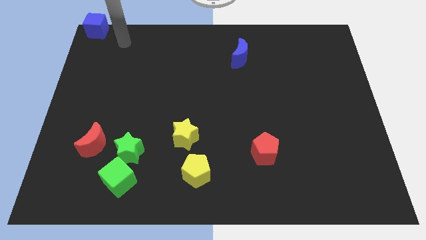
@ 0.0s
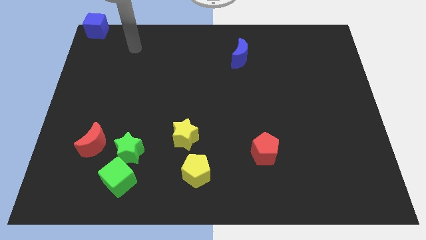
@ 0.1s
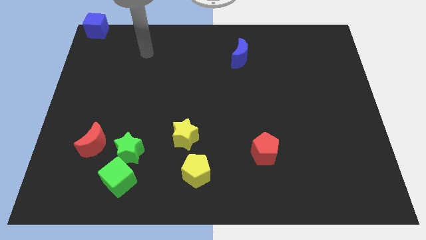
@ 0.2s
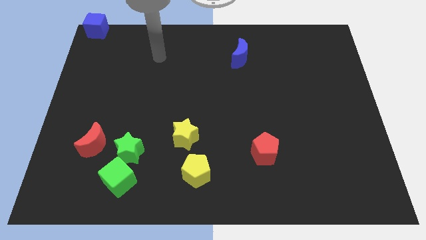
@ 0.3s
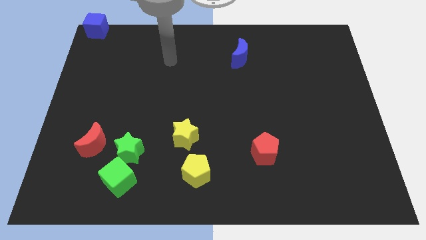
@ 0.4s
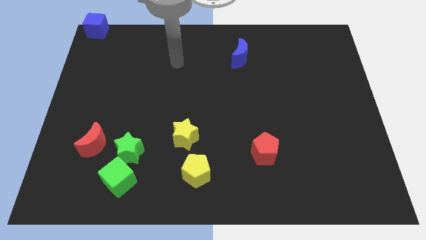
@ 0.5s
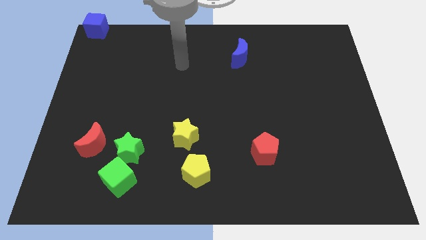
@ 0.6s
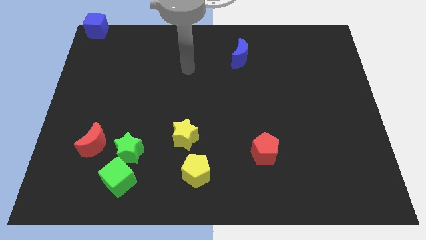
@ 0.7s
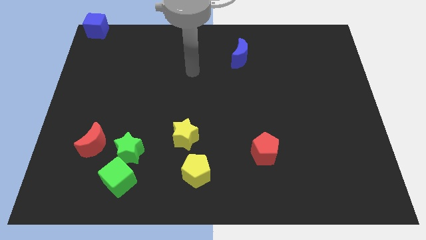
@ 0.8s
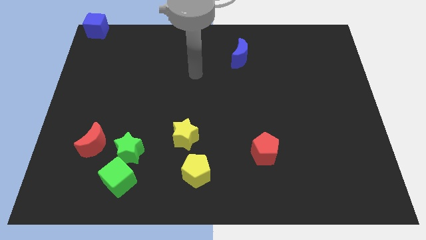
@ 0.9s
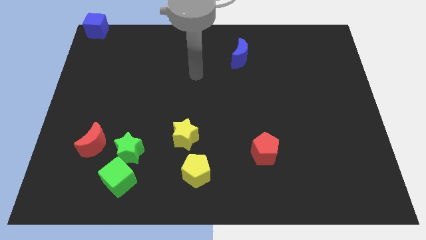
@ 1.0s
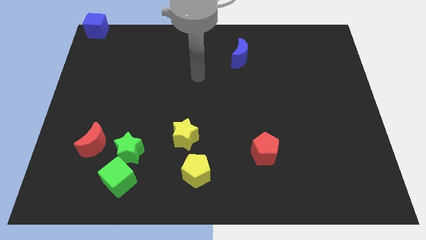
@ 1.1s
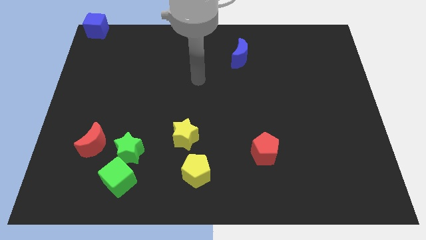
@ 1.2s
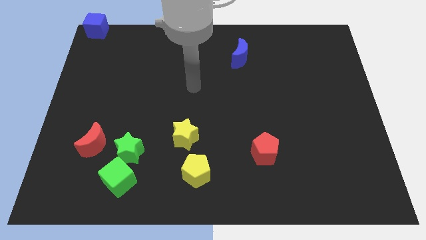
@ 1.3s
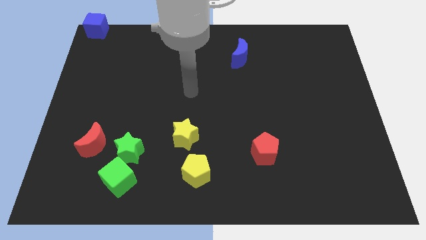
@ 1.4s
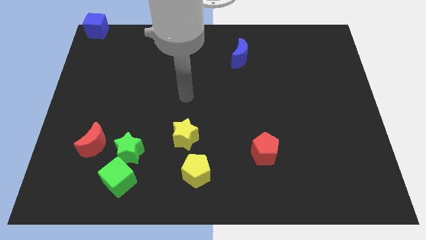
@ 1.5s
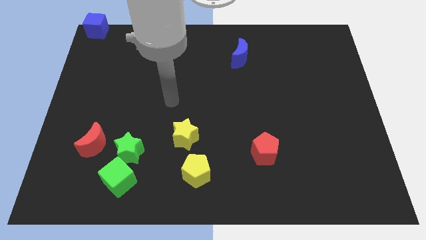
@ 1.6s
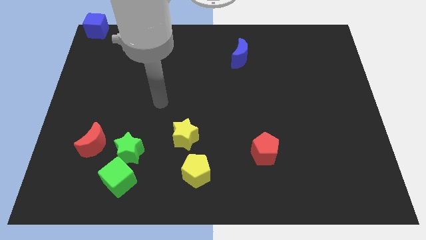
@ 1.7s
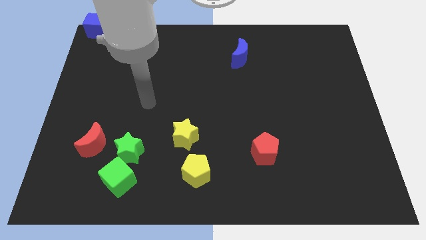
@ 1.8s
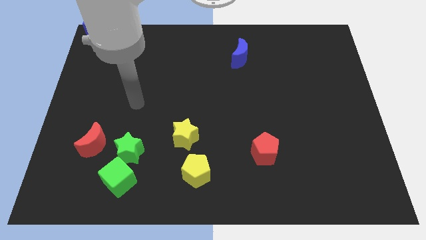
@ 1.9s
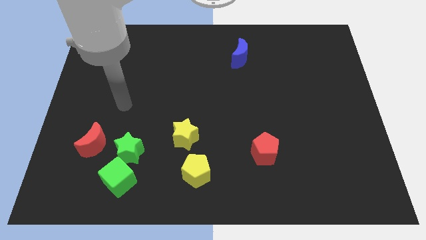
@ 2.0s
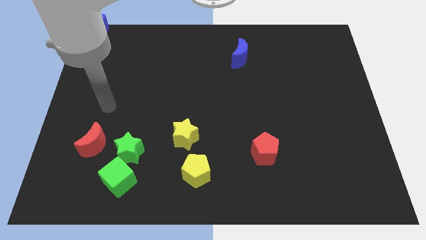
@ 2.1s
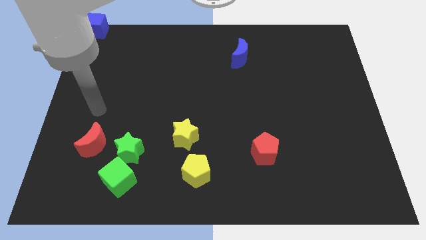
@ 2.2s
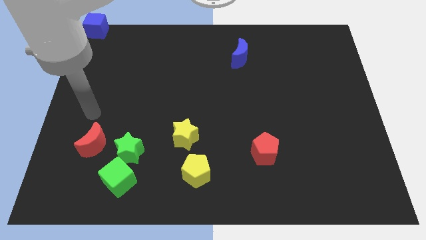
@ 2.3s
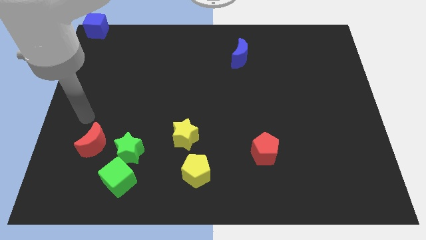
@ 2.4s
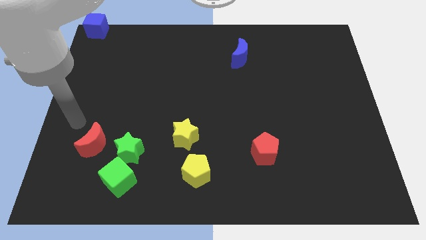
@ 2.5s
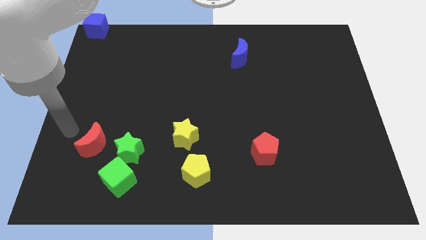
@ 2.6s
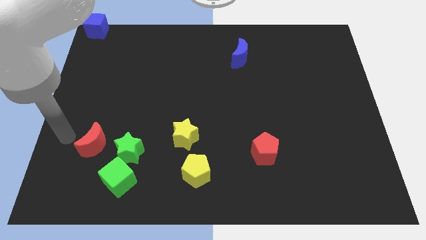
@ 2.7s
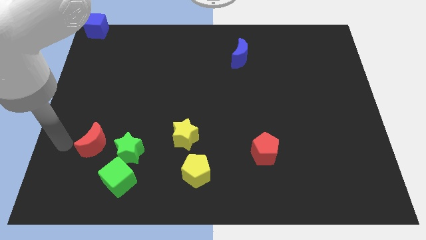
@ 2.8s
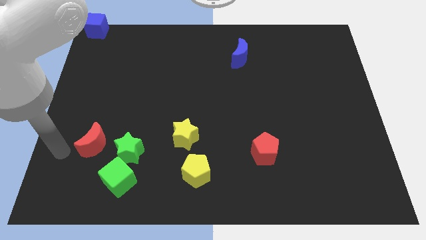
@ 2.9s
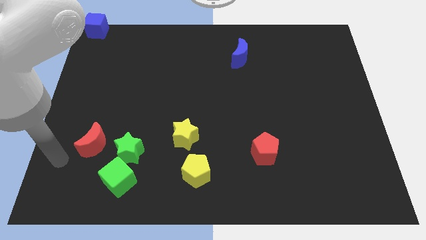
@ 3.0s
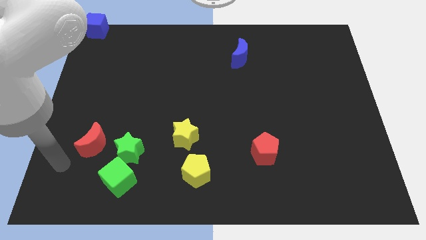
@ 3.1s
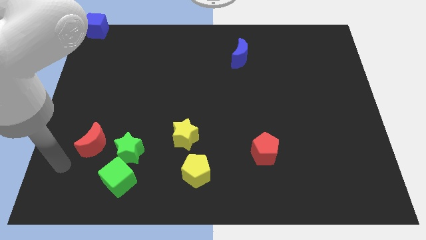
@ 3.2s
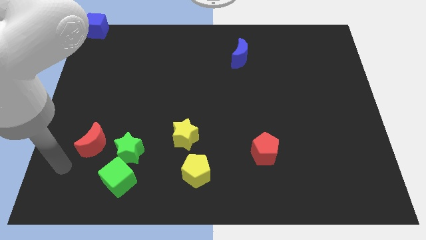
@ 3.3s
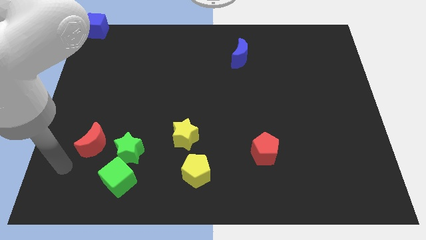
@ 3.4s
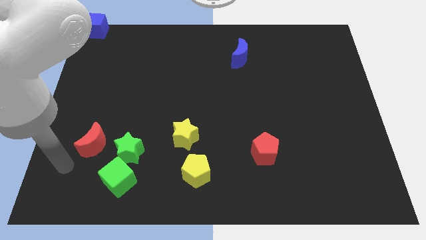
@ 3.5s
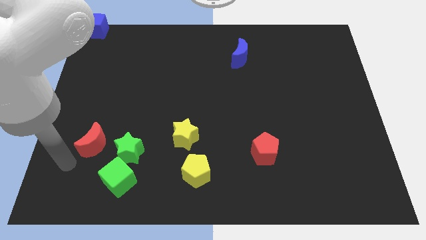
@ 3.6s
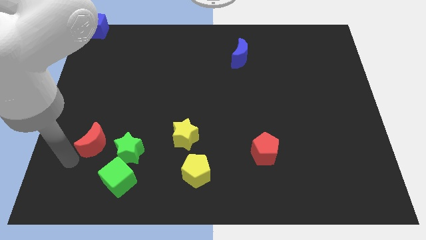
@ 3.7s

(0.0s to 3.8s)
move your arm towards the red crescent

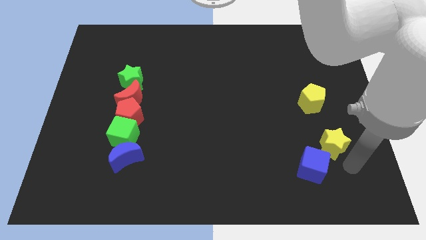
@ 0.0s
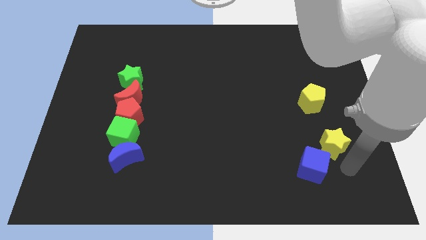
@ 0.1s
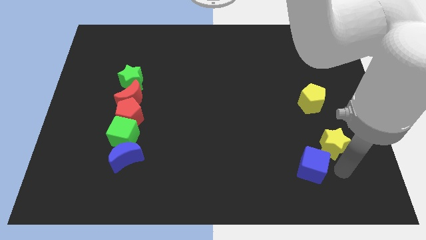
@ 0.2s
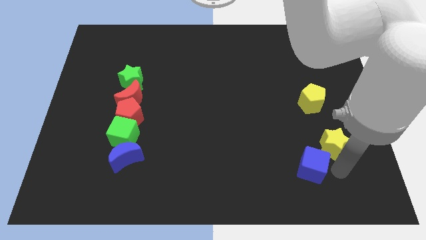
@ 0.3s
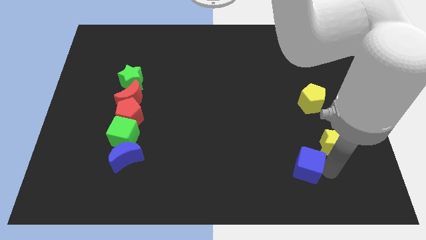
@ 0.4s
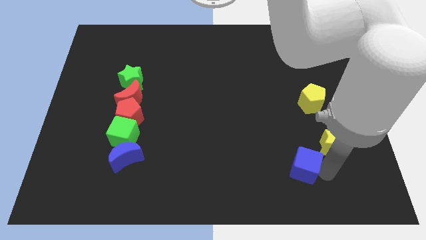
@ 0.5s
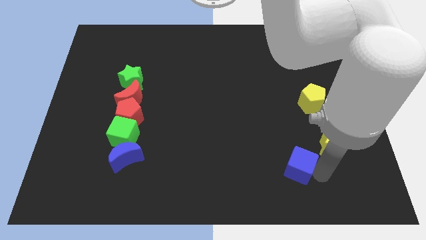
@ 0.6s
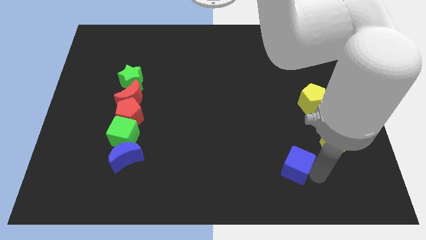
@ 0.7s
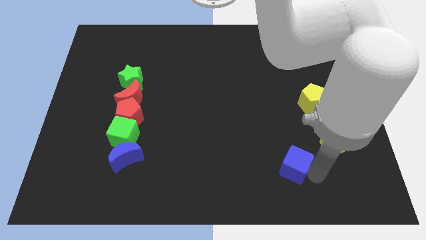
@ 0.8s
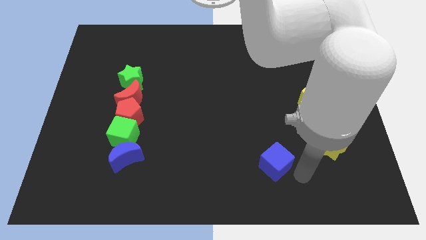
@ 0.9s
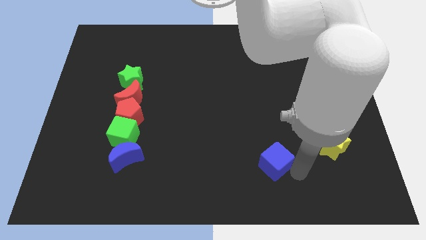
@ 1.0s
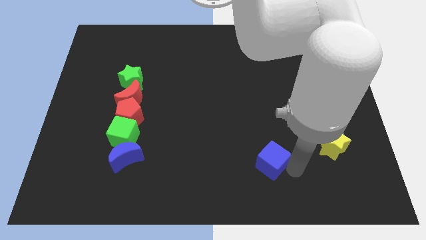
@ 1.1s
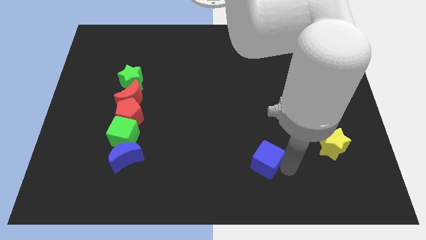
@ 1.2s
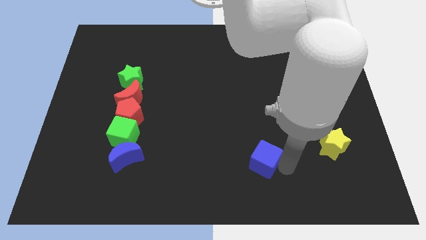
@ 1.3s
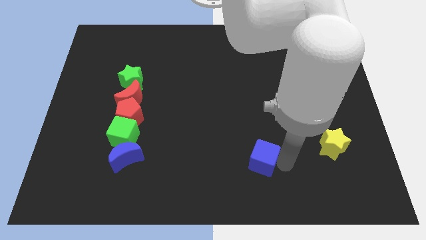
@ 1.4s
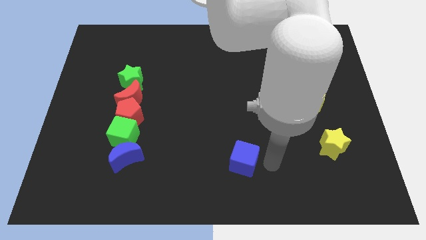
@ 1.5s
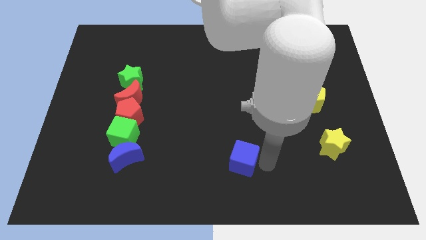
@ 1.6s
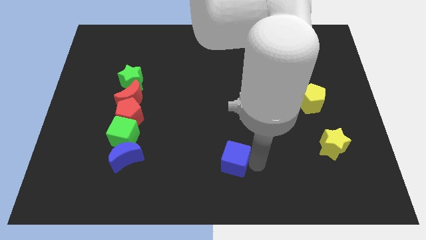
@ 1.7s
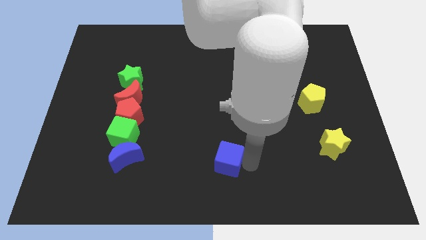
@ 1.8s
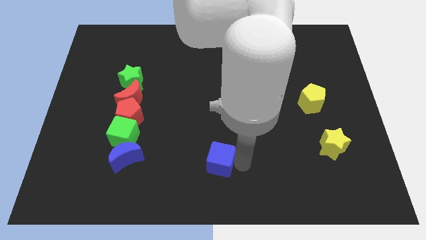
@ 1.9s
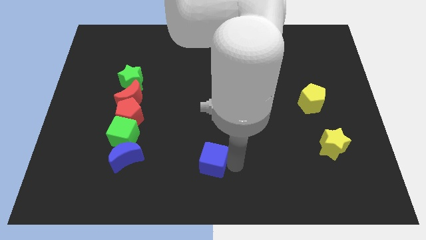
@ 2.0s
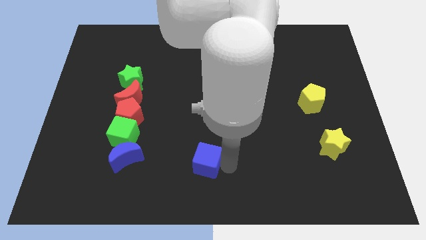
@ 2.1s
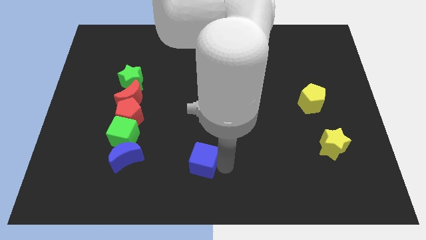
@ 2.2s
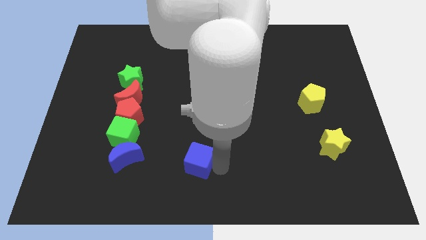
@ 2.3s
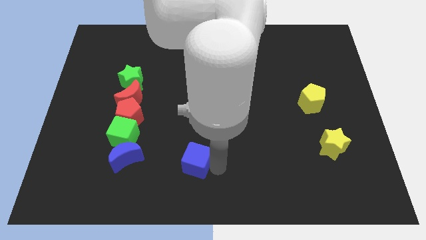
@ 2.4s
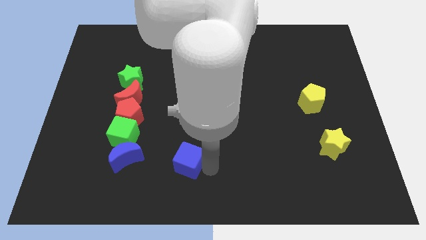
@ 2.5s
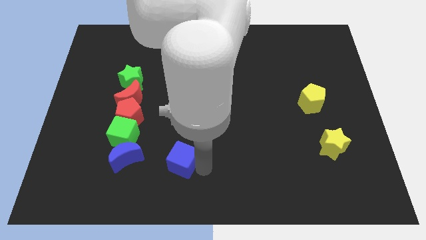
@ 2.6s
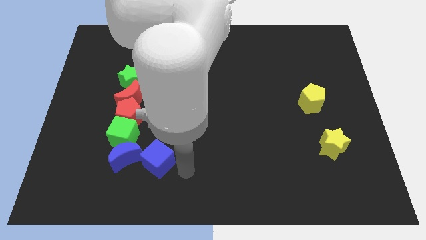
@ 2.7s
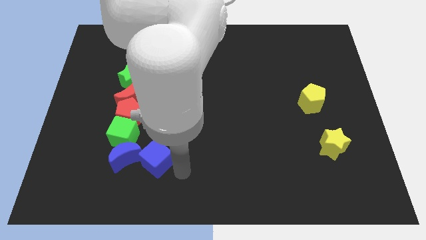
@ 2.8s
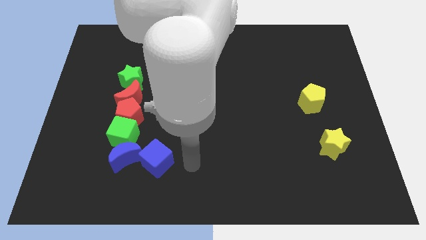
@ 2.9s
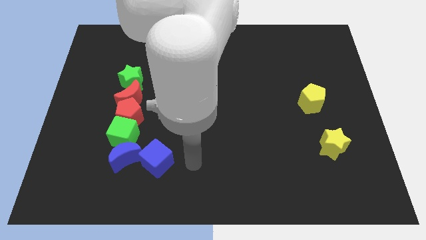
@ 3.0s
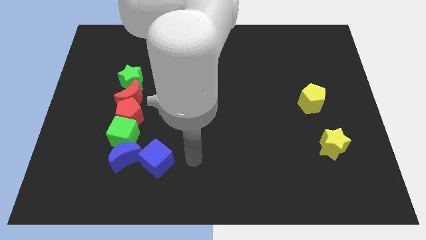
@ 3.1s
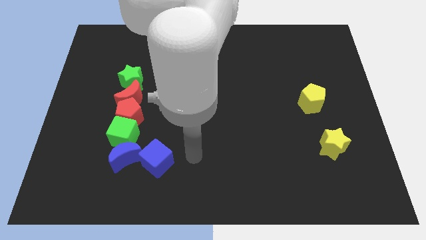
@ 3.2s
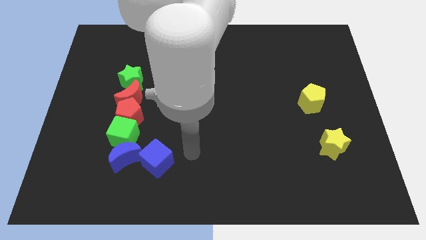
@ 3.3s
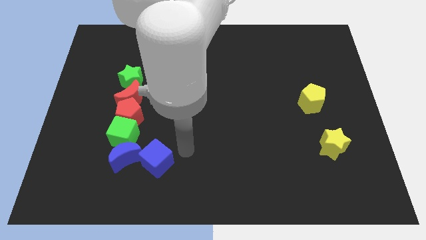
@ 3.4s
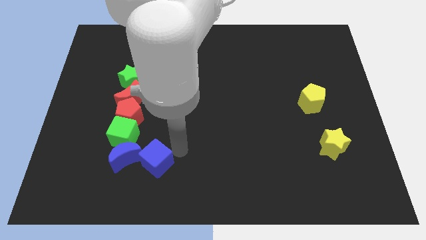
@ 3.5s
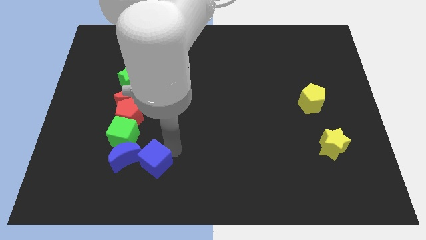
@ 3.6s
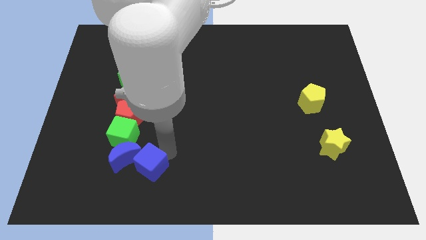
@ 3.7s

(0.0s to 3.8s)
push the blue cube to the right of blue moon

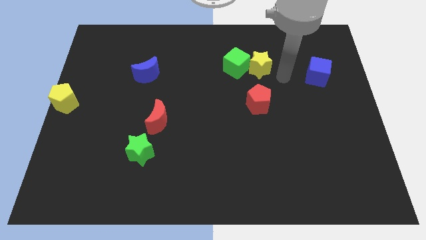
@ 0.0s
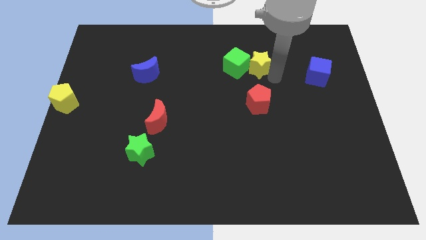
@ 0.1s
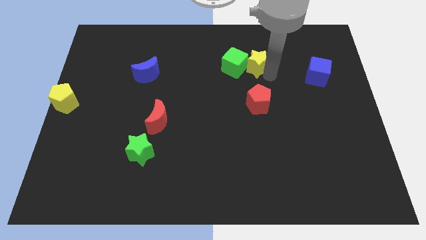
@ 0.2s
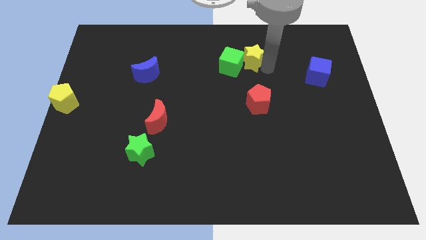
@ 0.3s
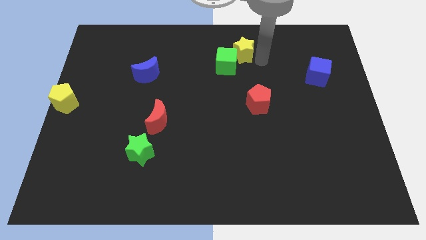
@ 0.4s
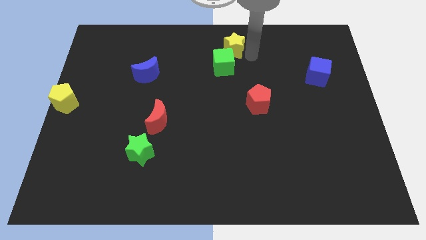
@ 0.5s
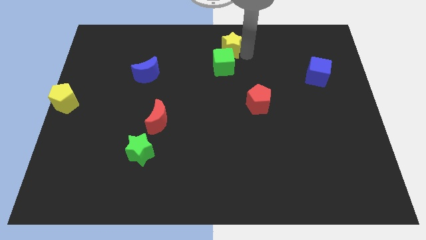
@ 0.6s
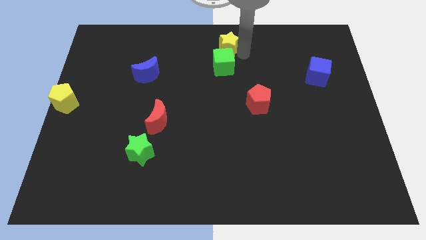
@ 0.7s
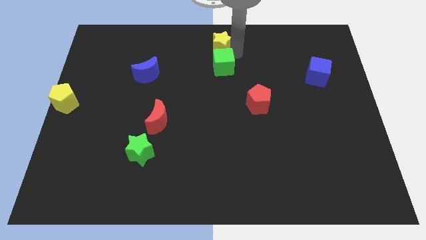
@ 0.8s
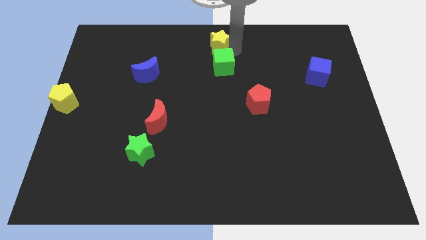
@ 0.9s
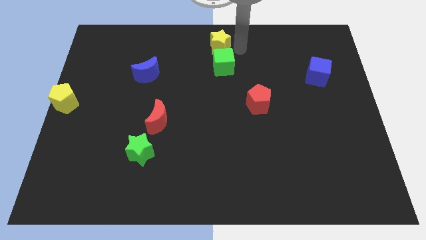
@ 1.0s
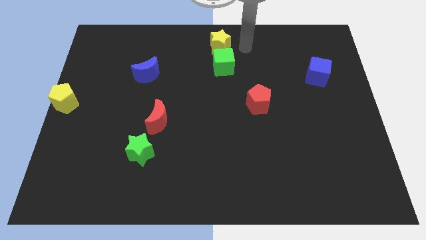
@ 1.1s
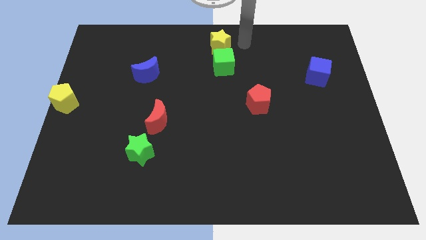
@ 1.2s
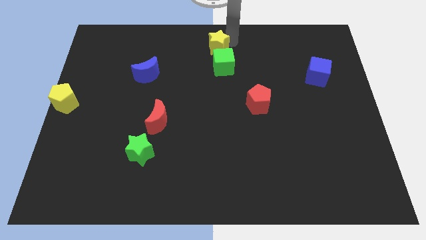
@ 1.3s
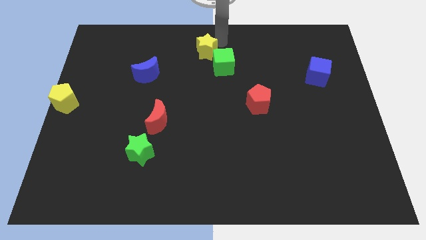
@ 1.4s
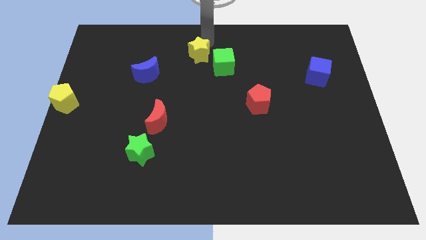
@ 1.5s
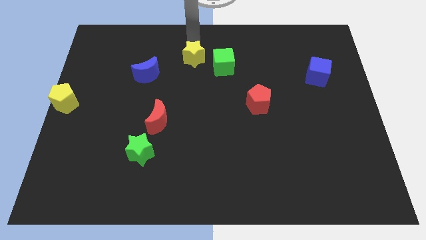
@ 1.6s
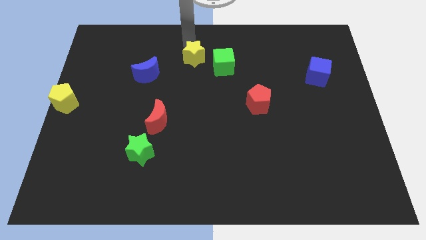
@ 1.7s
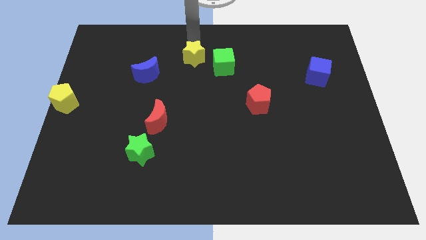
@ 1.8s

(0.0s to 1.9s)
separate yellow star and the green cube
